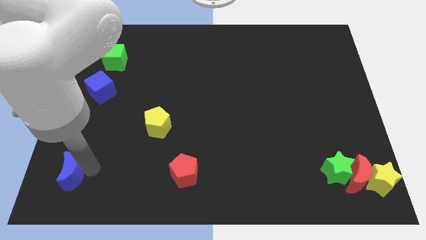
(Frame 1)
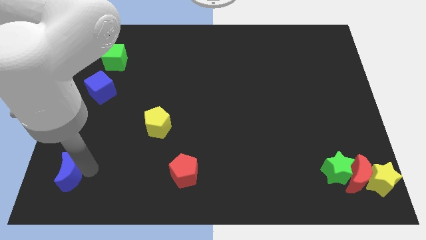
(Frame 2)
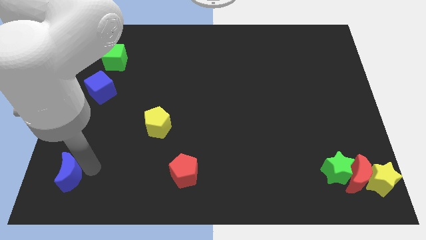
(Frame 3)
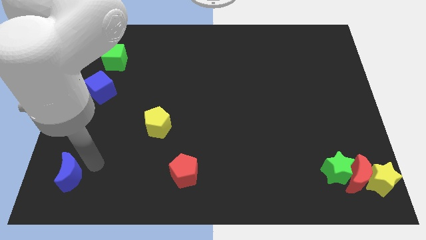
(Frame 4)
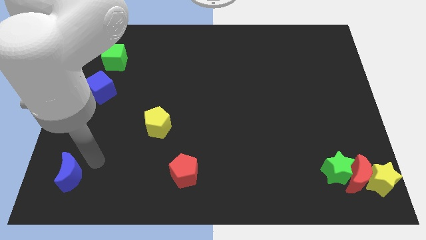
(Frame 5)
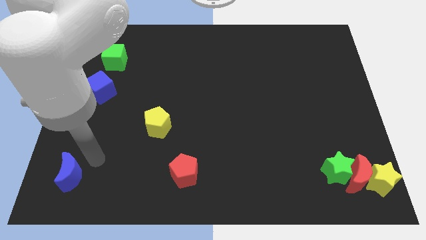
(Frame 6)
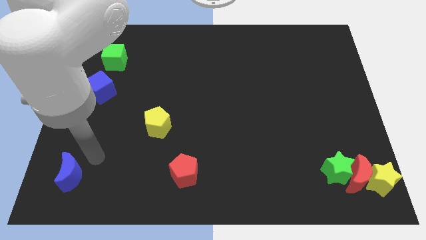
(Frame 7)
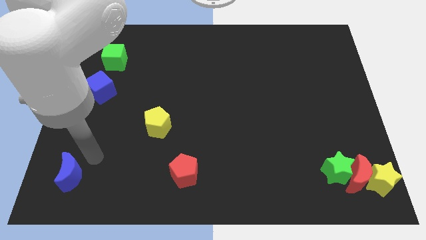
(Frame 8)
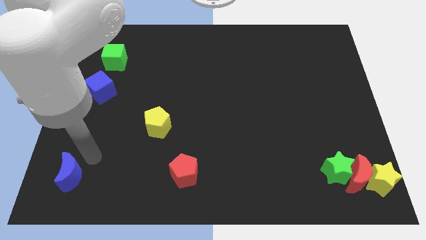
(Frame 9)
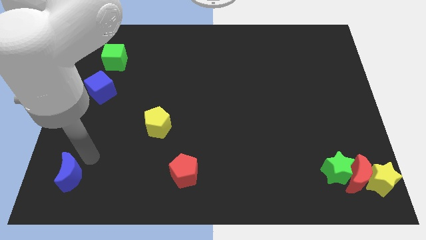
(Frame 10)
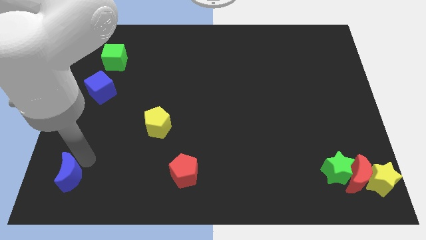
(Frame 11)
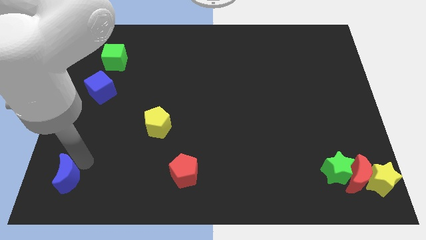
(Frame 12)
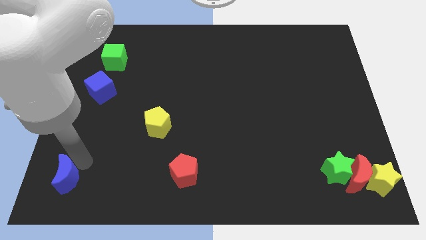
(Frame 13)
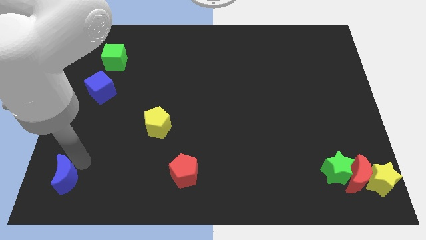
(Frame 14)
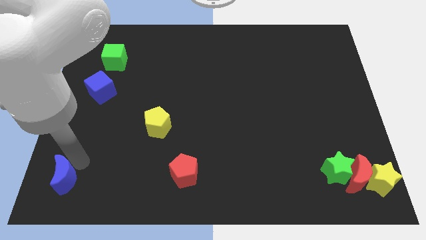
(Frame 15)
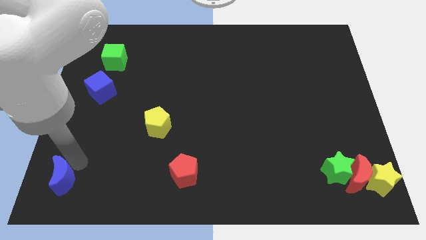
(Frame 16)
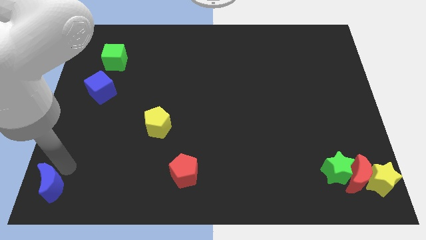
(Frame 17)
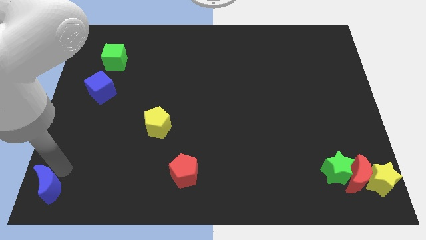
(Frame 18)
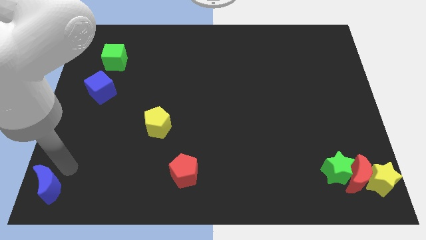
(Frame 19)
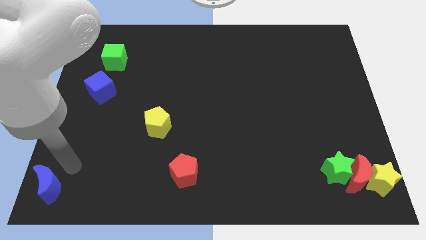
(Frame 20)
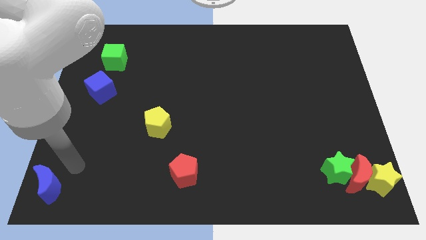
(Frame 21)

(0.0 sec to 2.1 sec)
place blue crescent towards bottom left corner of the board

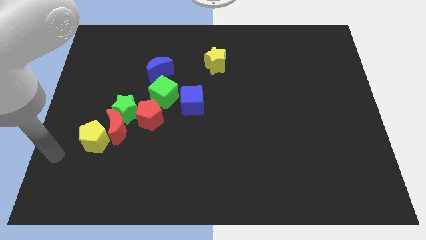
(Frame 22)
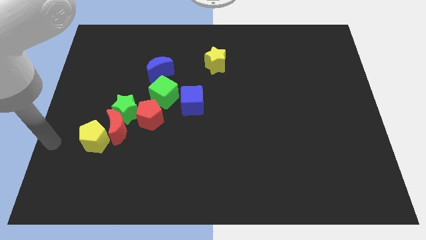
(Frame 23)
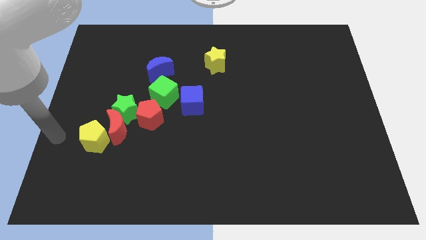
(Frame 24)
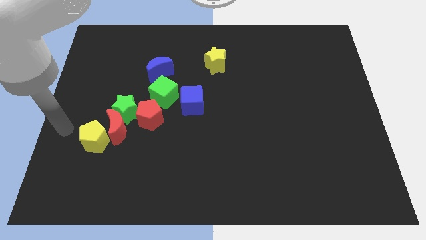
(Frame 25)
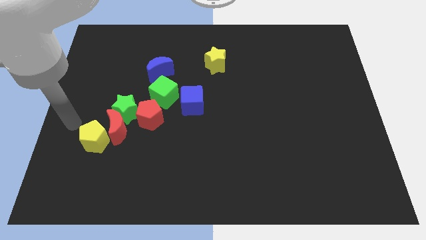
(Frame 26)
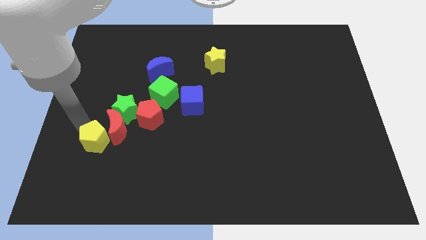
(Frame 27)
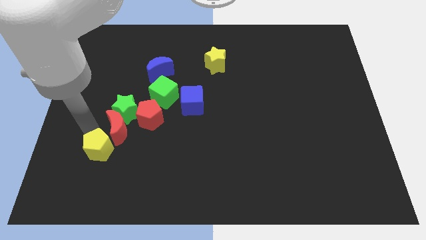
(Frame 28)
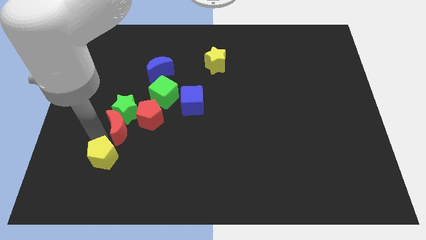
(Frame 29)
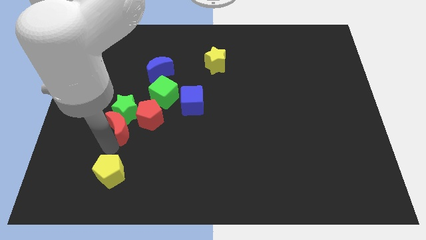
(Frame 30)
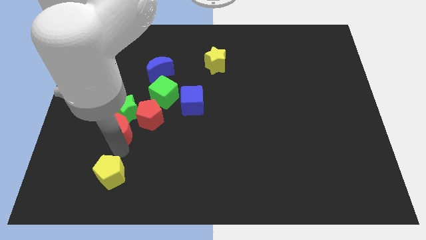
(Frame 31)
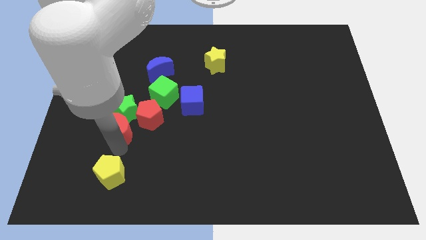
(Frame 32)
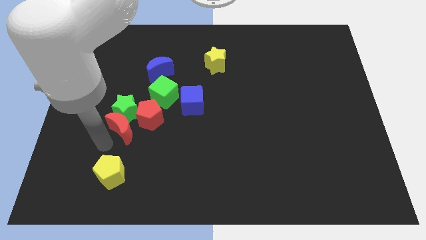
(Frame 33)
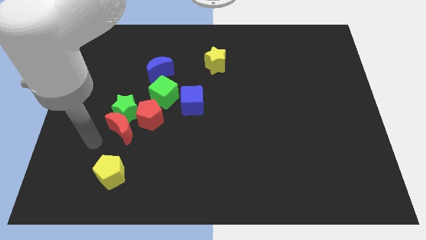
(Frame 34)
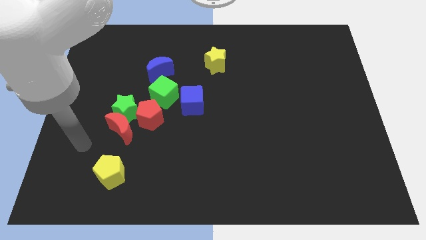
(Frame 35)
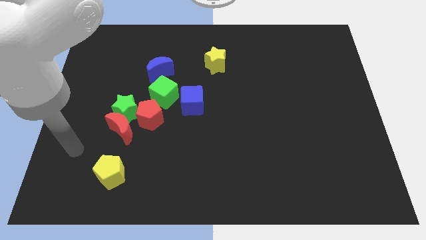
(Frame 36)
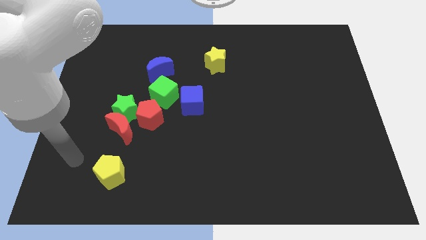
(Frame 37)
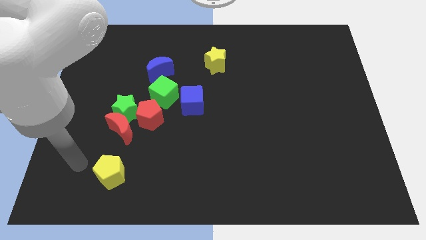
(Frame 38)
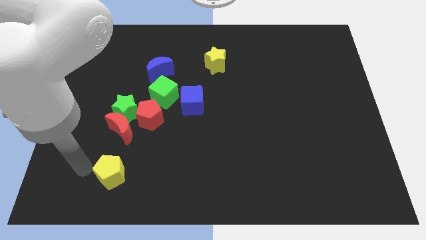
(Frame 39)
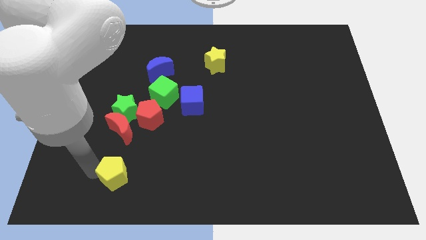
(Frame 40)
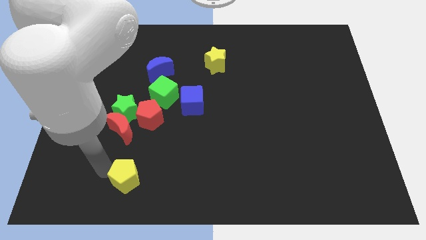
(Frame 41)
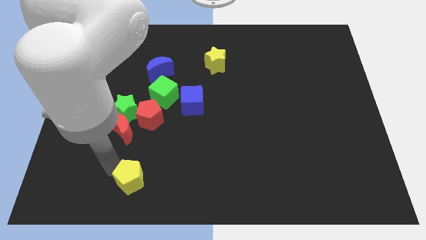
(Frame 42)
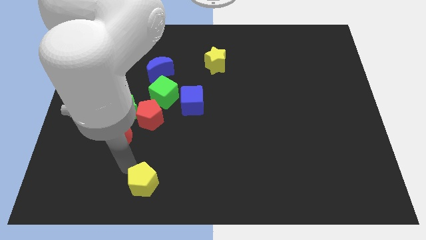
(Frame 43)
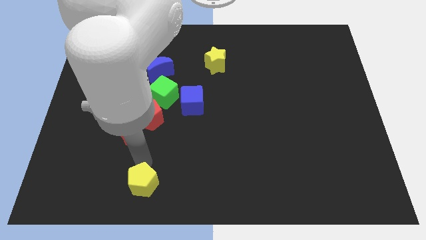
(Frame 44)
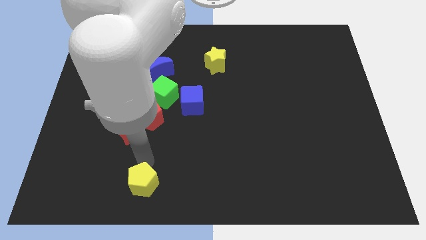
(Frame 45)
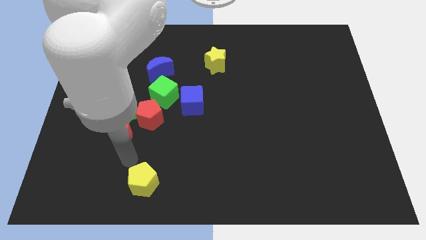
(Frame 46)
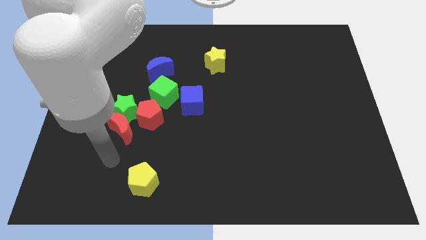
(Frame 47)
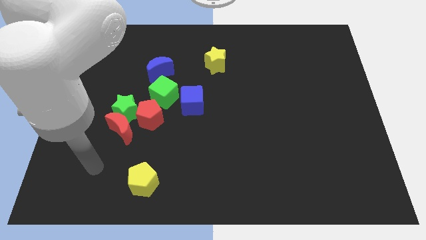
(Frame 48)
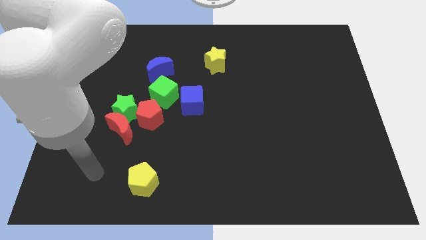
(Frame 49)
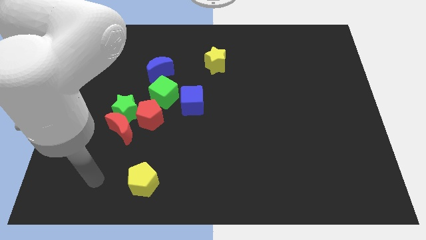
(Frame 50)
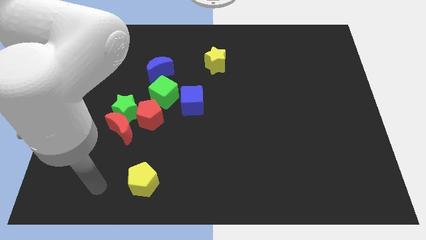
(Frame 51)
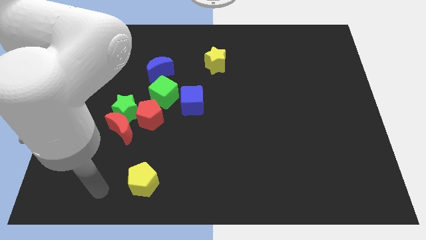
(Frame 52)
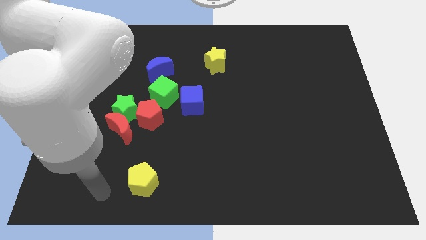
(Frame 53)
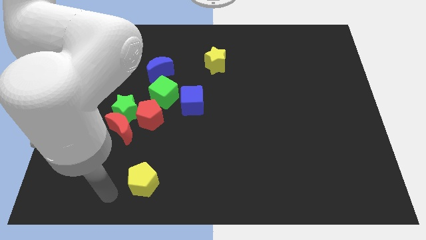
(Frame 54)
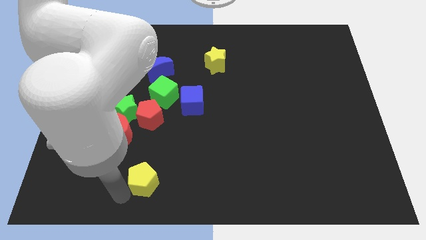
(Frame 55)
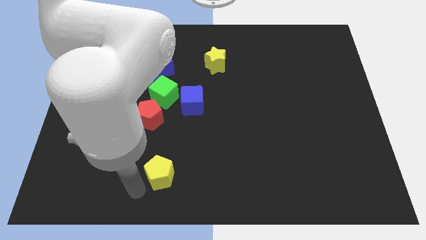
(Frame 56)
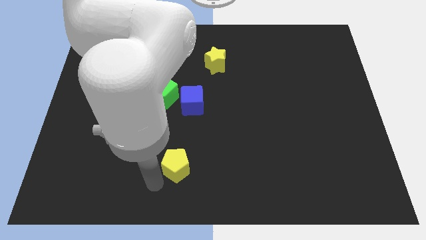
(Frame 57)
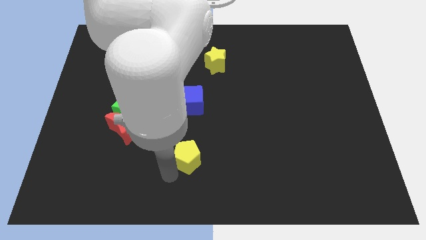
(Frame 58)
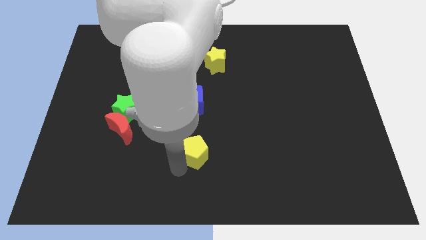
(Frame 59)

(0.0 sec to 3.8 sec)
place yellow pentagon to the bottom of blue cube

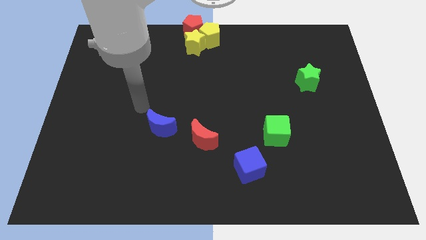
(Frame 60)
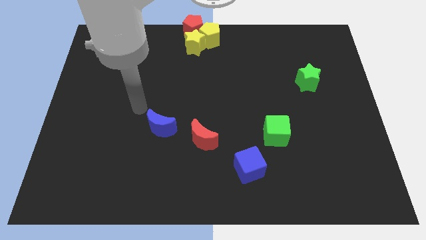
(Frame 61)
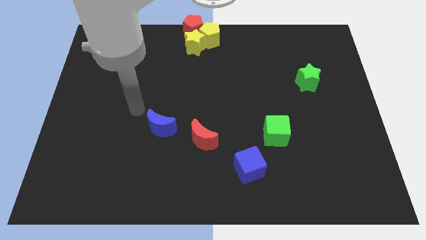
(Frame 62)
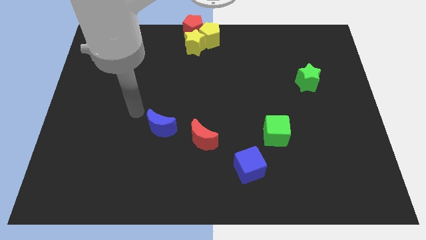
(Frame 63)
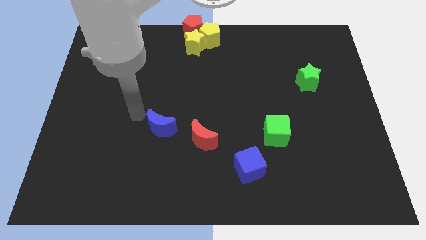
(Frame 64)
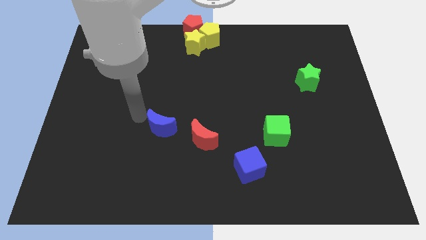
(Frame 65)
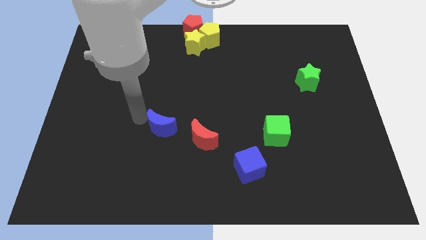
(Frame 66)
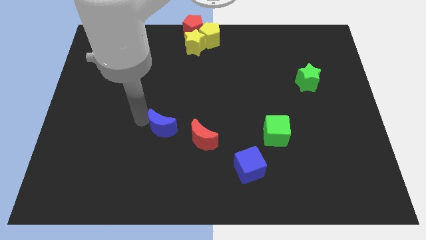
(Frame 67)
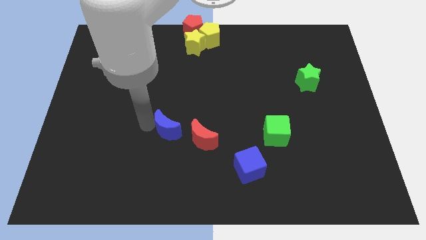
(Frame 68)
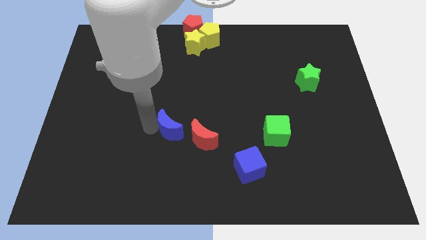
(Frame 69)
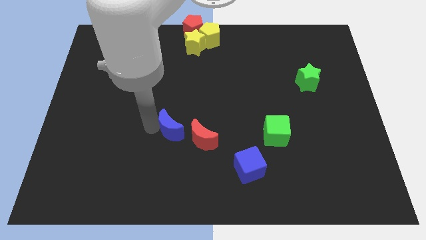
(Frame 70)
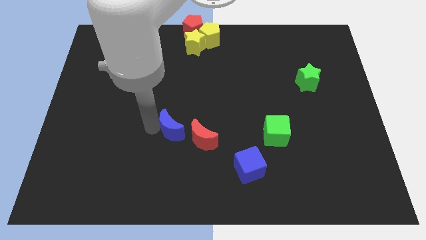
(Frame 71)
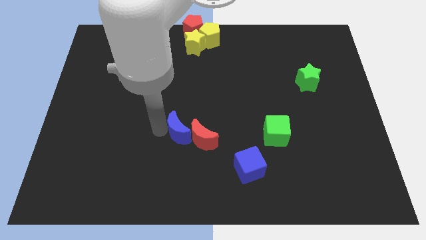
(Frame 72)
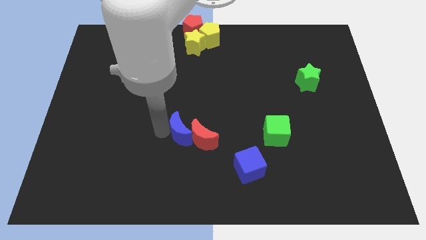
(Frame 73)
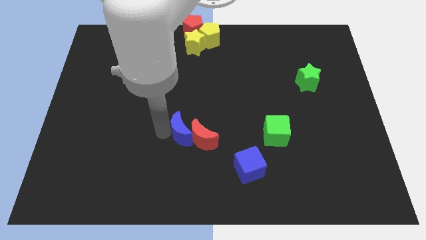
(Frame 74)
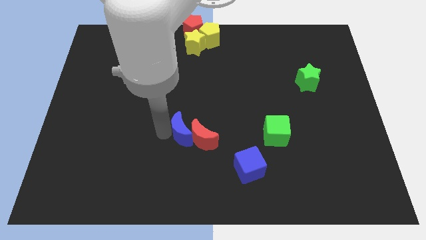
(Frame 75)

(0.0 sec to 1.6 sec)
move blue moon near red moon

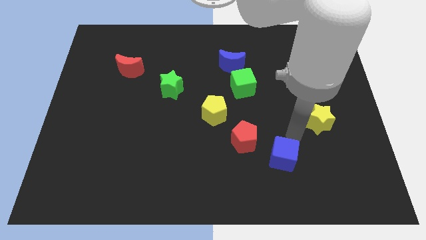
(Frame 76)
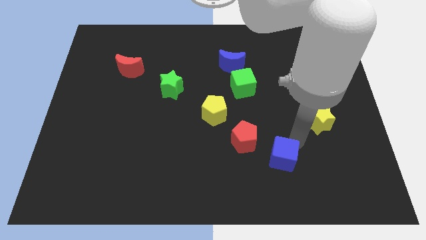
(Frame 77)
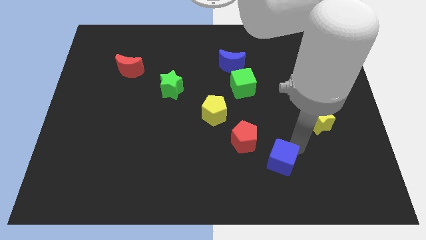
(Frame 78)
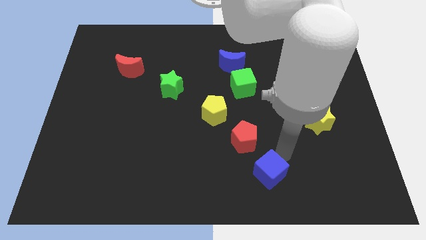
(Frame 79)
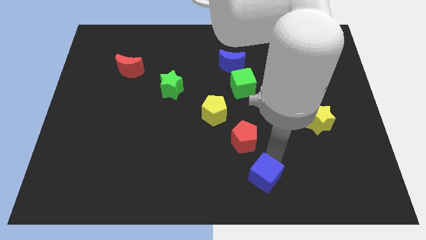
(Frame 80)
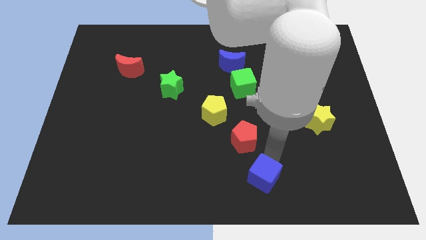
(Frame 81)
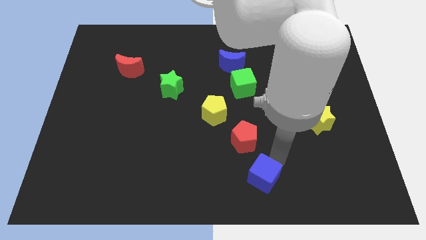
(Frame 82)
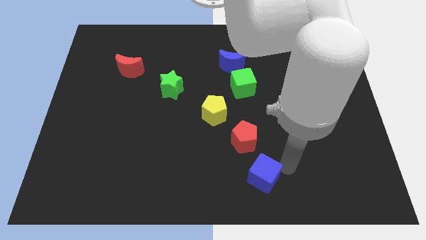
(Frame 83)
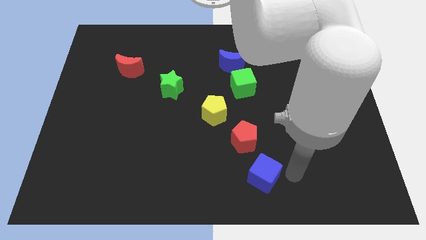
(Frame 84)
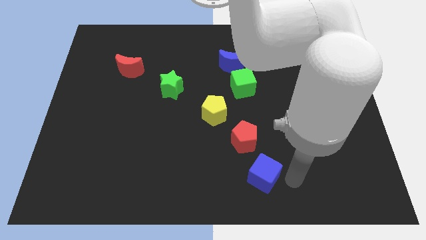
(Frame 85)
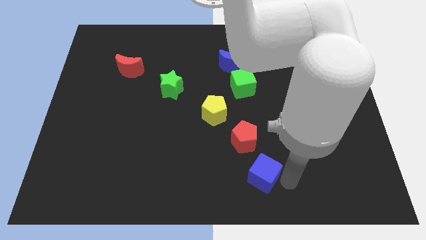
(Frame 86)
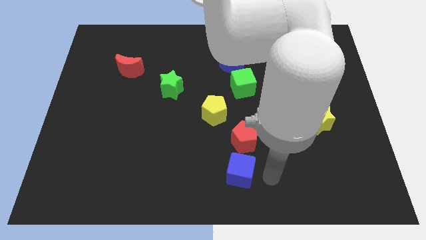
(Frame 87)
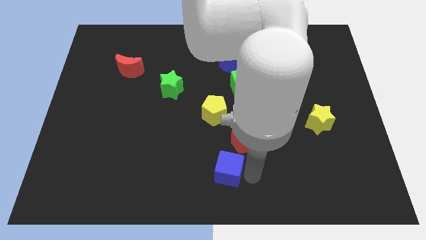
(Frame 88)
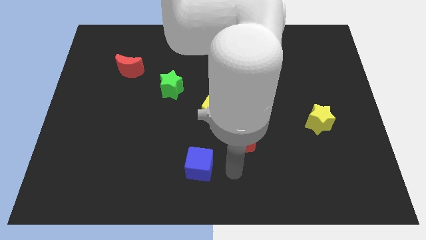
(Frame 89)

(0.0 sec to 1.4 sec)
move the blue cube to the bottom left side of the red pentagon
